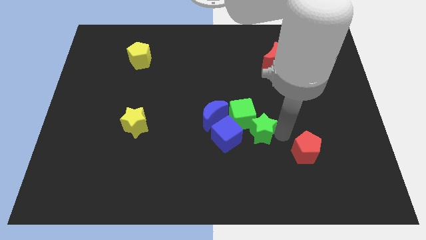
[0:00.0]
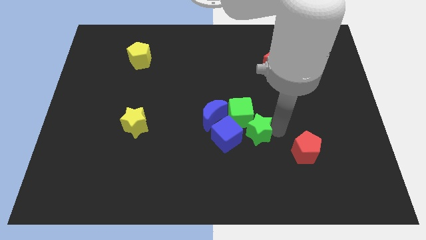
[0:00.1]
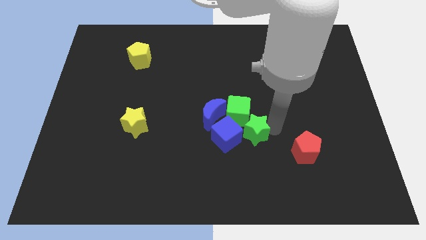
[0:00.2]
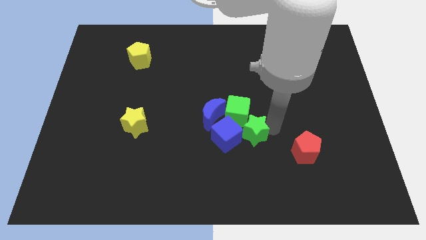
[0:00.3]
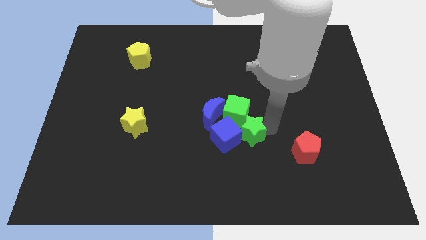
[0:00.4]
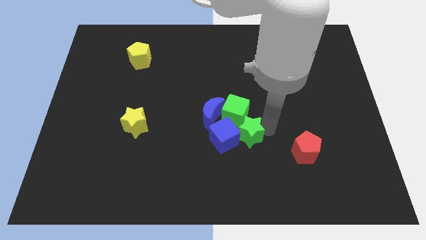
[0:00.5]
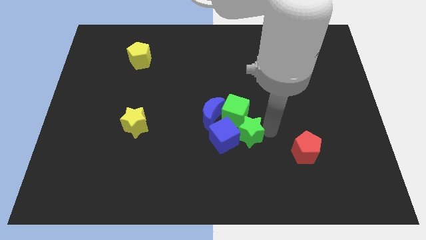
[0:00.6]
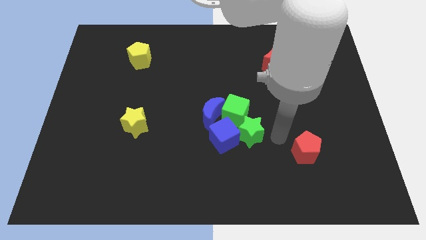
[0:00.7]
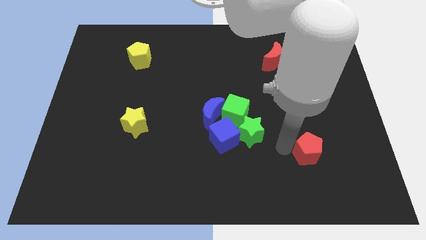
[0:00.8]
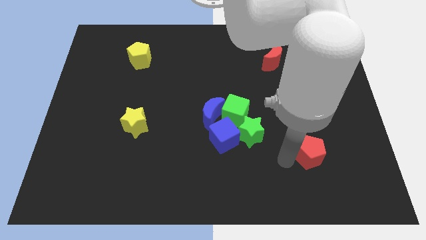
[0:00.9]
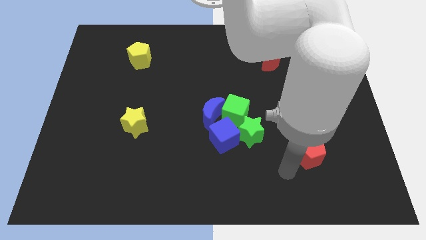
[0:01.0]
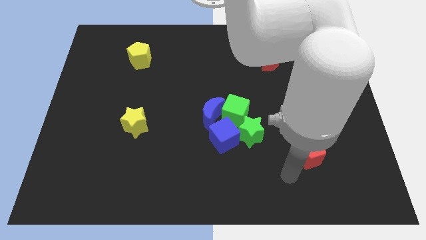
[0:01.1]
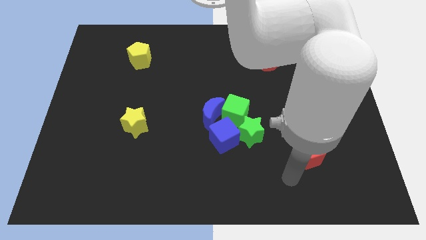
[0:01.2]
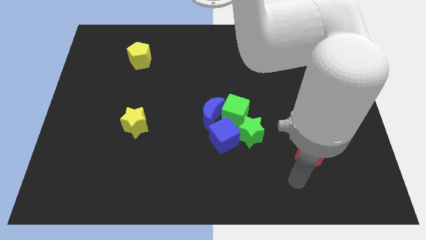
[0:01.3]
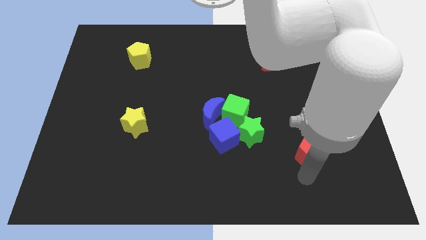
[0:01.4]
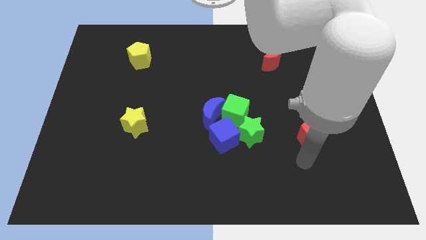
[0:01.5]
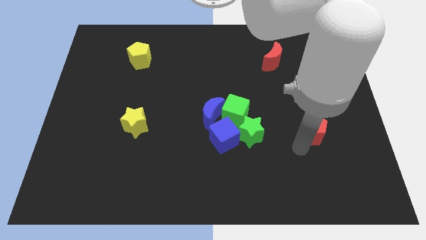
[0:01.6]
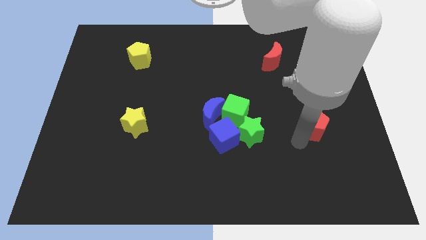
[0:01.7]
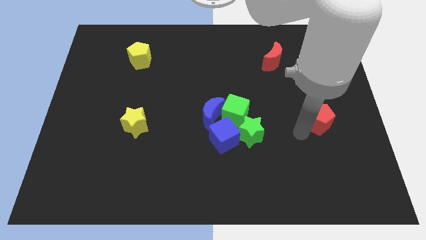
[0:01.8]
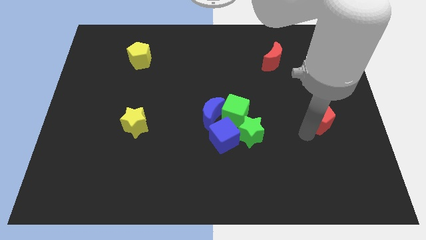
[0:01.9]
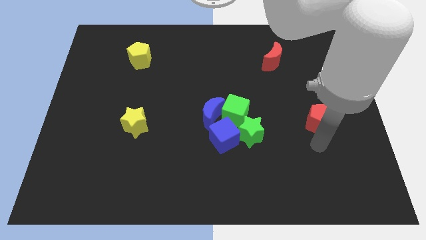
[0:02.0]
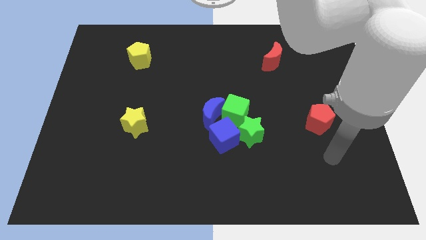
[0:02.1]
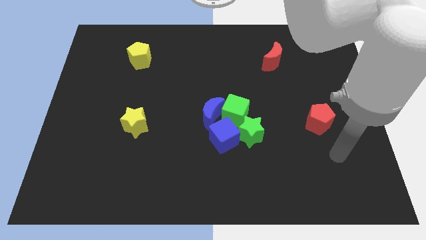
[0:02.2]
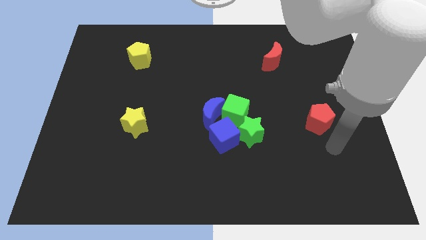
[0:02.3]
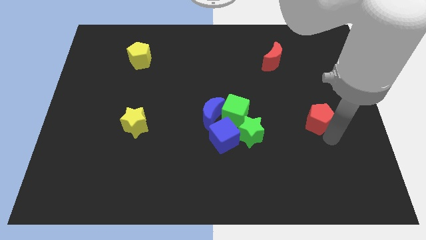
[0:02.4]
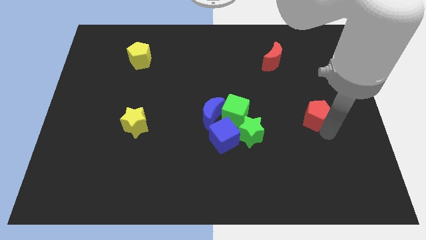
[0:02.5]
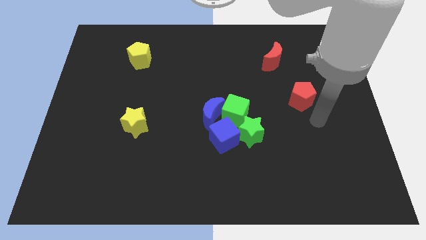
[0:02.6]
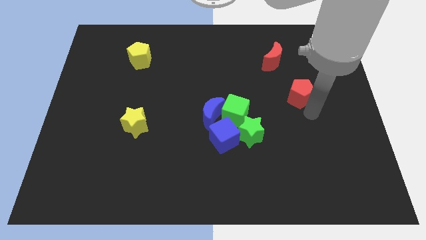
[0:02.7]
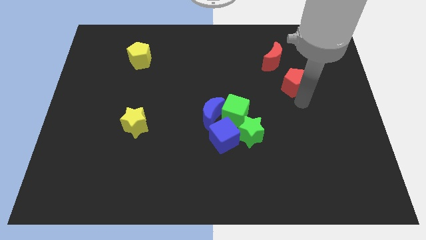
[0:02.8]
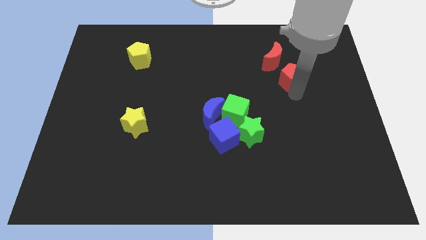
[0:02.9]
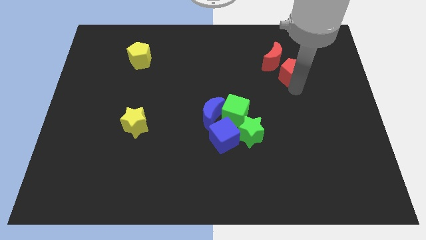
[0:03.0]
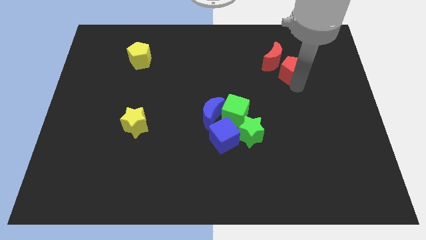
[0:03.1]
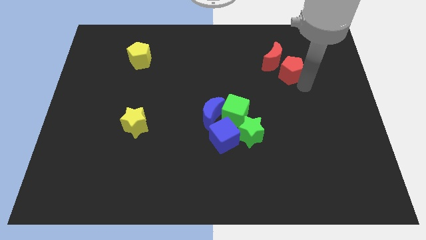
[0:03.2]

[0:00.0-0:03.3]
move the red pentagon near to the red moon

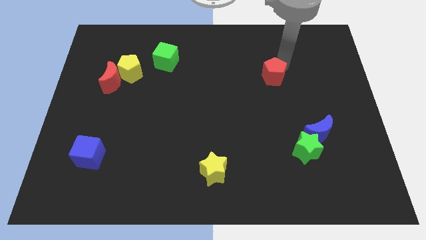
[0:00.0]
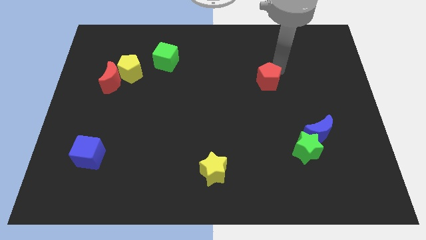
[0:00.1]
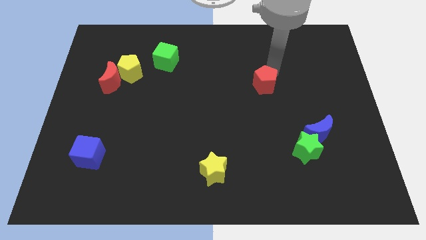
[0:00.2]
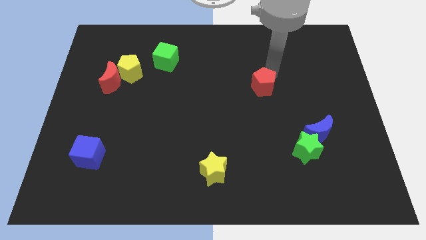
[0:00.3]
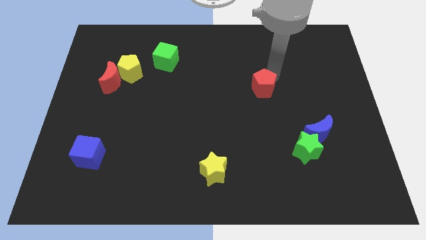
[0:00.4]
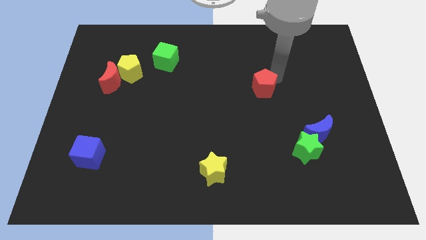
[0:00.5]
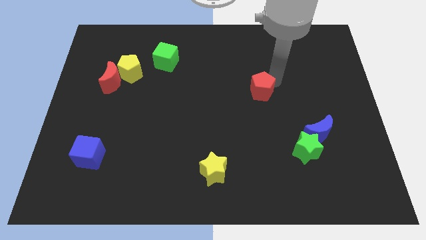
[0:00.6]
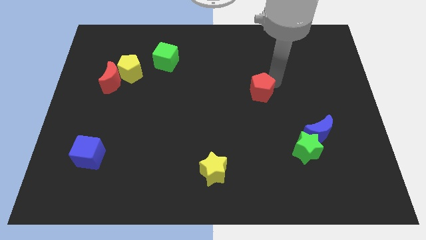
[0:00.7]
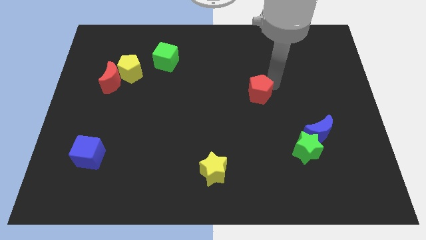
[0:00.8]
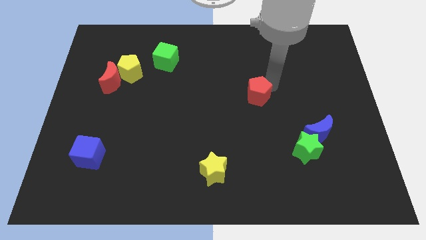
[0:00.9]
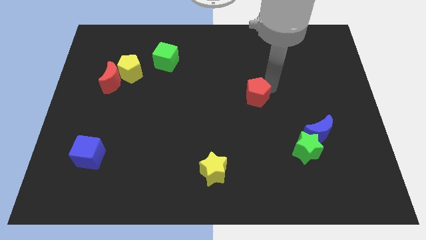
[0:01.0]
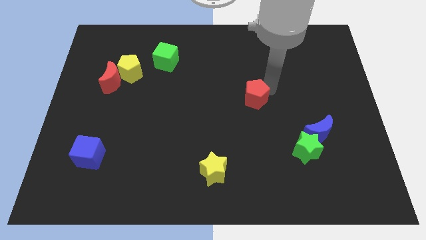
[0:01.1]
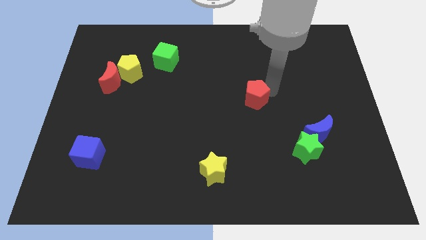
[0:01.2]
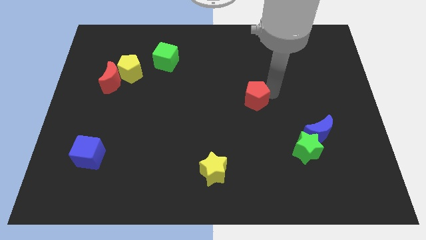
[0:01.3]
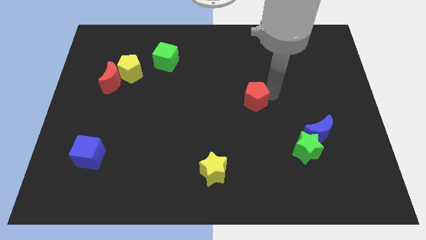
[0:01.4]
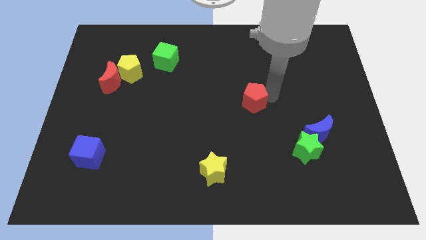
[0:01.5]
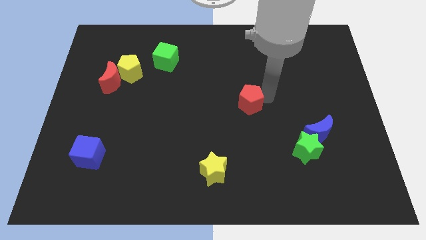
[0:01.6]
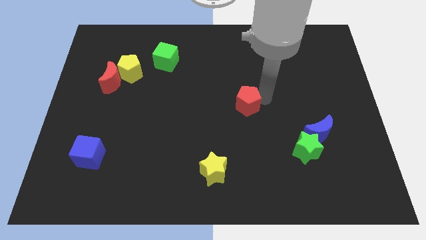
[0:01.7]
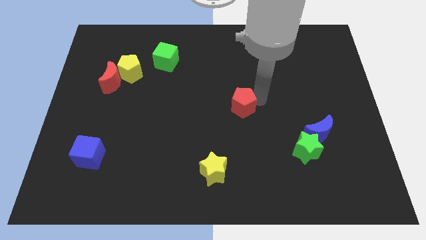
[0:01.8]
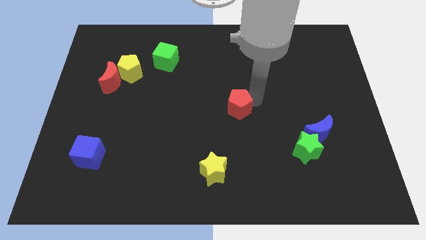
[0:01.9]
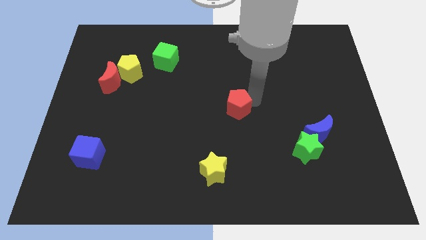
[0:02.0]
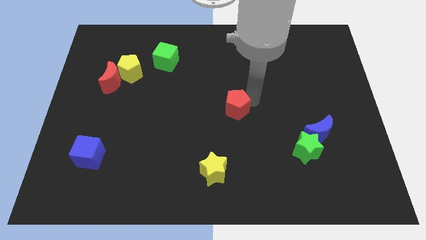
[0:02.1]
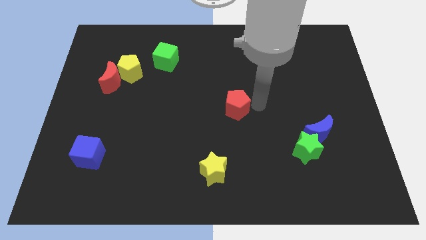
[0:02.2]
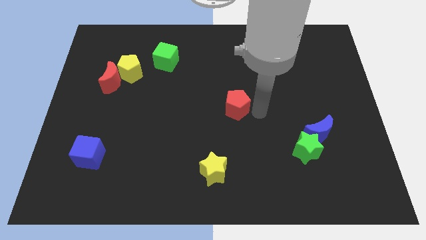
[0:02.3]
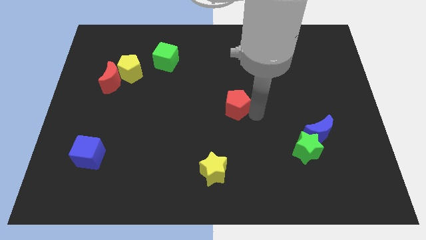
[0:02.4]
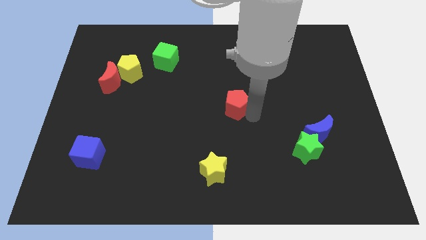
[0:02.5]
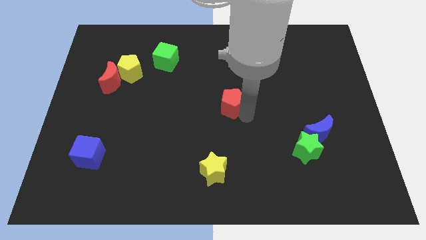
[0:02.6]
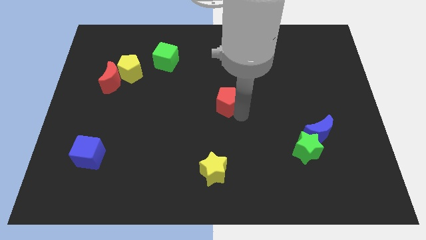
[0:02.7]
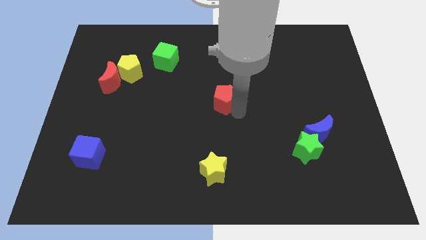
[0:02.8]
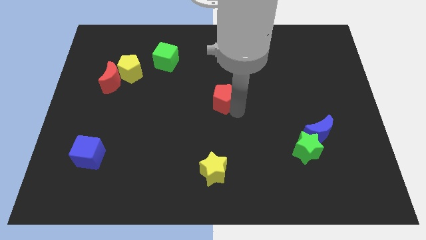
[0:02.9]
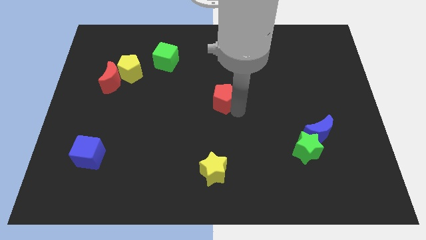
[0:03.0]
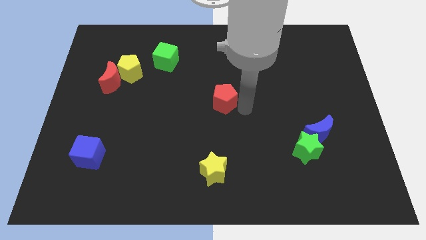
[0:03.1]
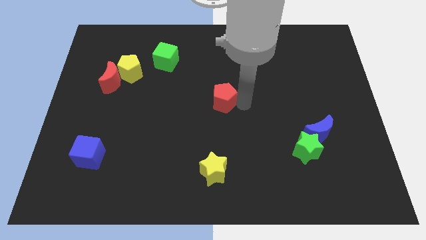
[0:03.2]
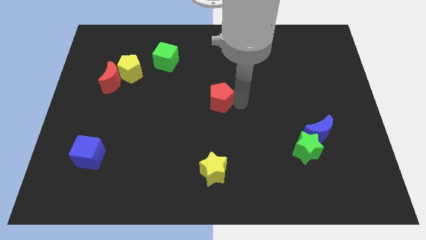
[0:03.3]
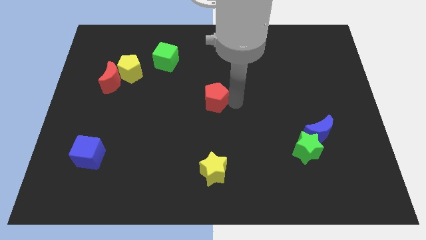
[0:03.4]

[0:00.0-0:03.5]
move the red pentagon to the top of the yellow star

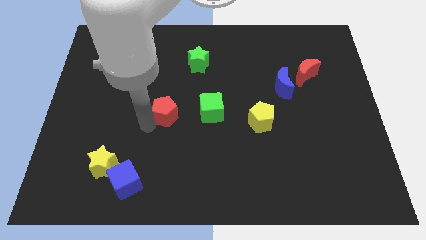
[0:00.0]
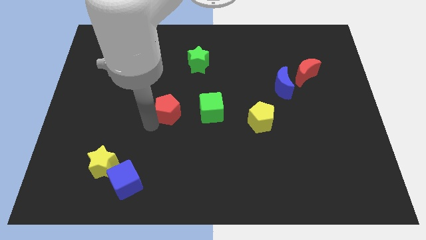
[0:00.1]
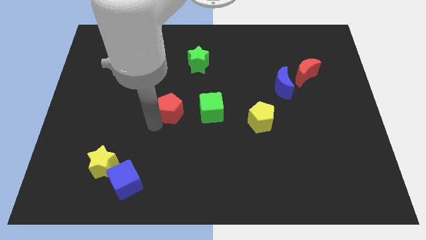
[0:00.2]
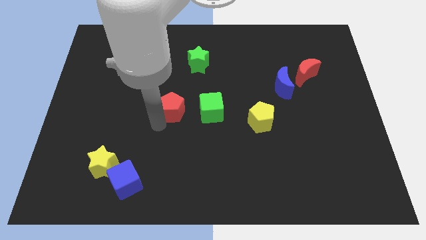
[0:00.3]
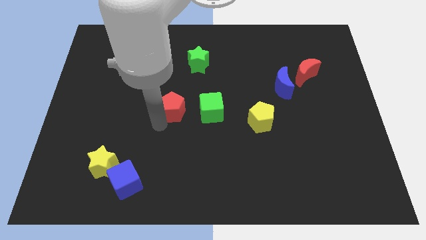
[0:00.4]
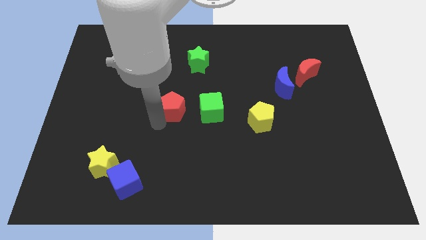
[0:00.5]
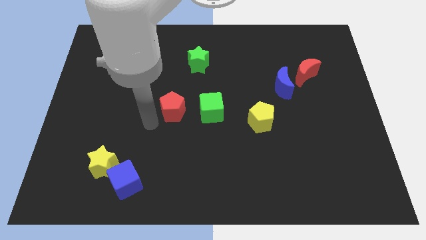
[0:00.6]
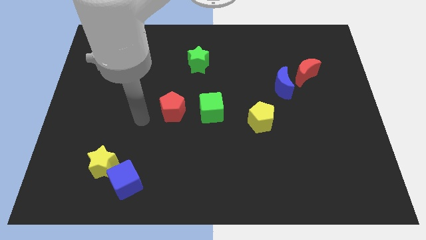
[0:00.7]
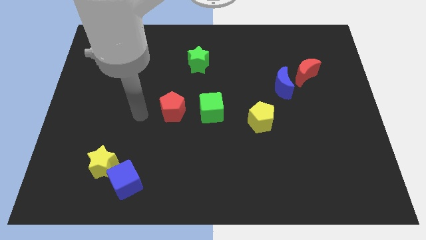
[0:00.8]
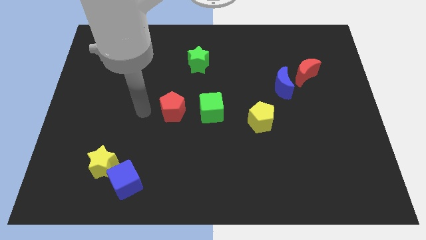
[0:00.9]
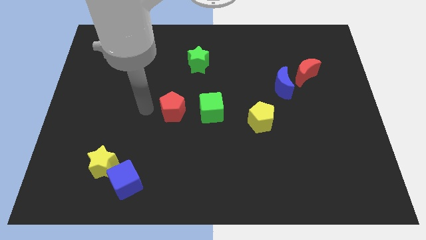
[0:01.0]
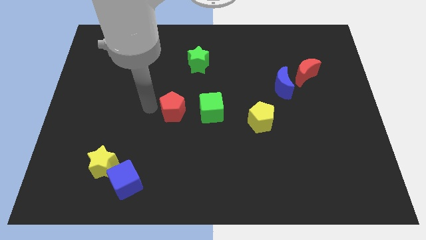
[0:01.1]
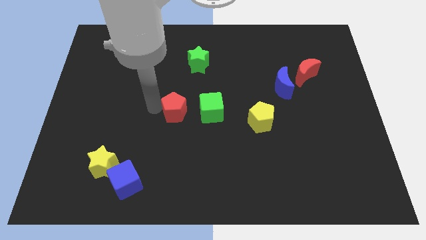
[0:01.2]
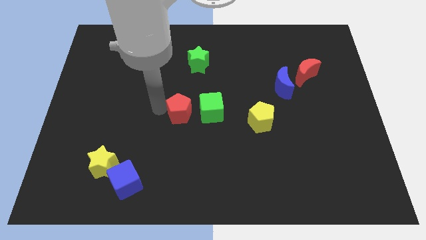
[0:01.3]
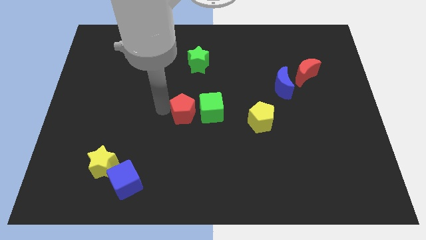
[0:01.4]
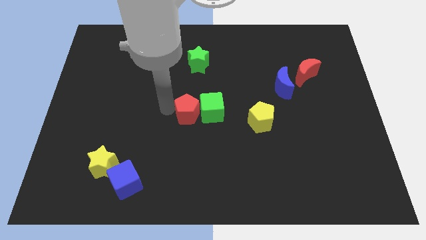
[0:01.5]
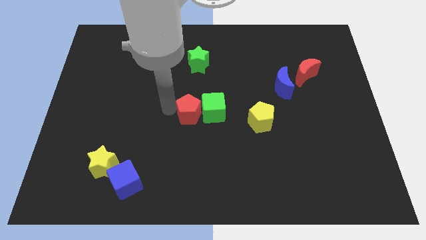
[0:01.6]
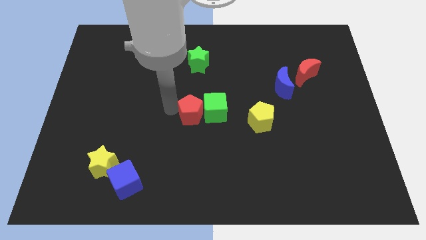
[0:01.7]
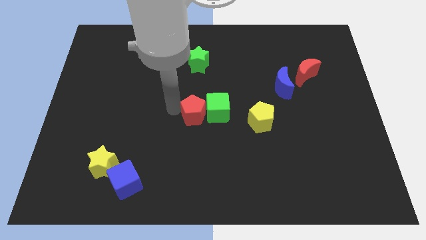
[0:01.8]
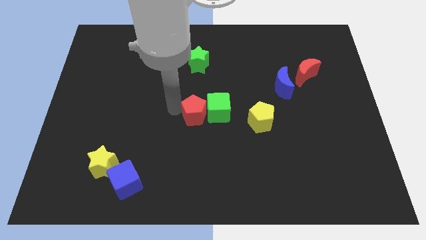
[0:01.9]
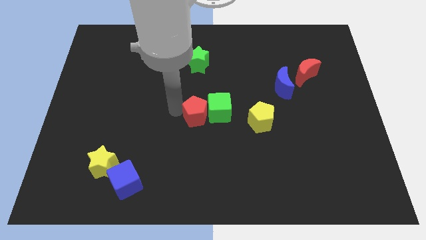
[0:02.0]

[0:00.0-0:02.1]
push the red pentagon into the green cube

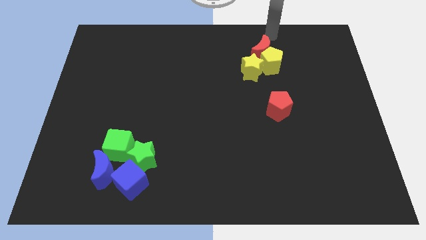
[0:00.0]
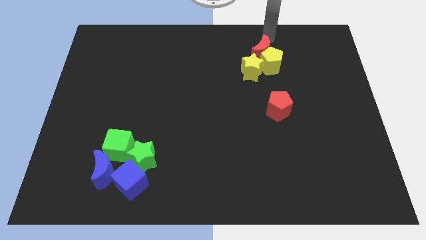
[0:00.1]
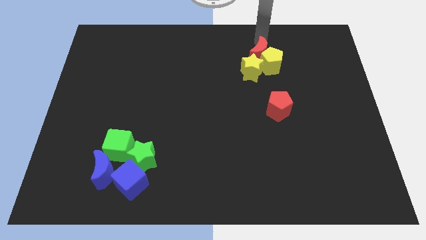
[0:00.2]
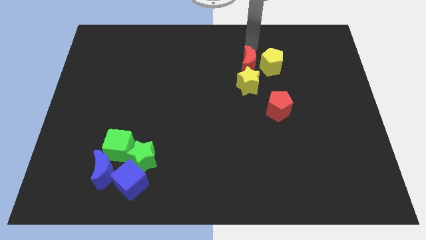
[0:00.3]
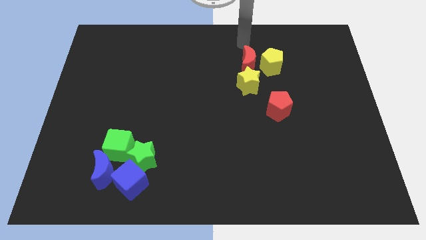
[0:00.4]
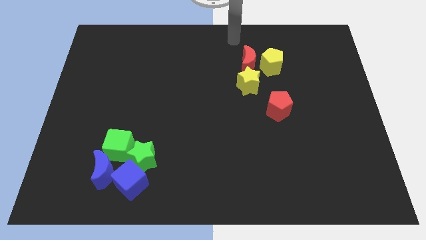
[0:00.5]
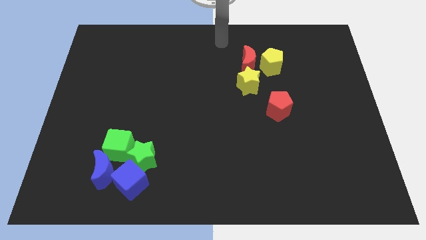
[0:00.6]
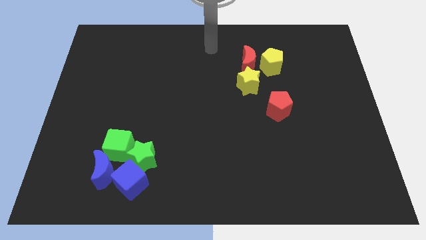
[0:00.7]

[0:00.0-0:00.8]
push the red moon into the yellow star
